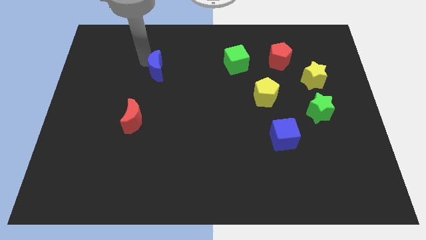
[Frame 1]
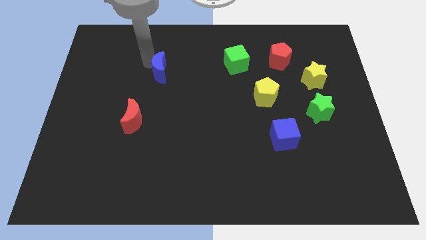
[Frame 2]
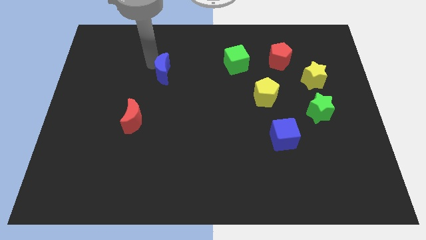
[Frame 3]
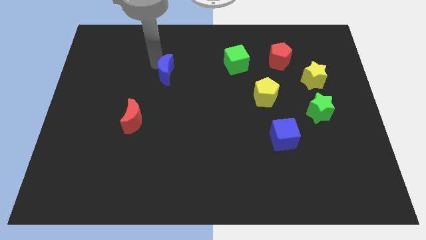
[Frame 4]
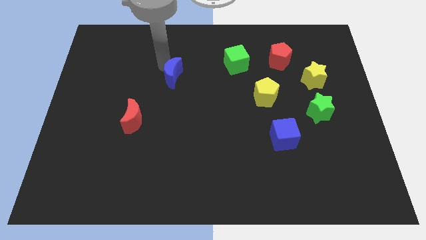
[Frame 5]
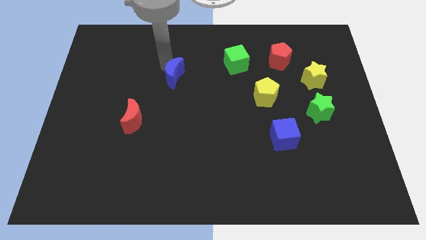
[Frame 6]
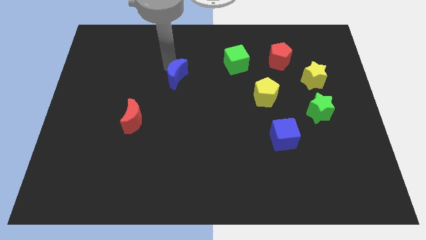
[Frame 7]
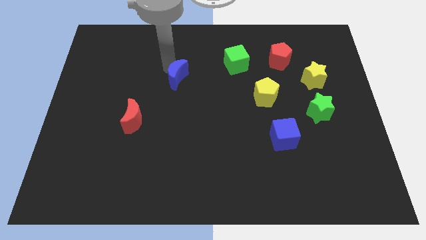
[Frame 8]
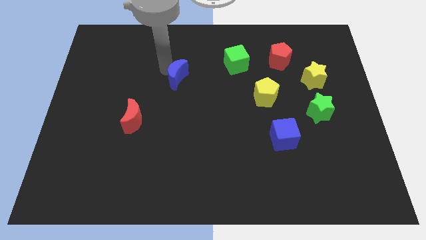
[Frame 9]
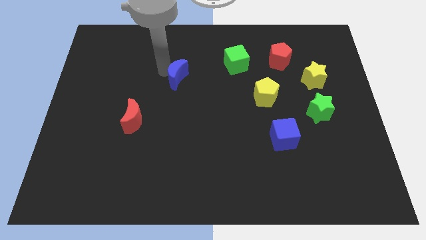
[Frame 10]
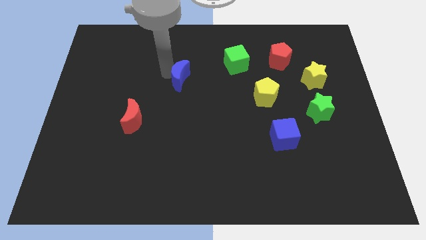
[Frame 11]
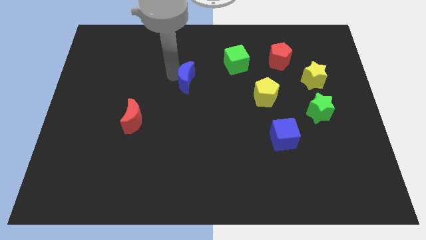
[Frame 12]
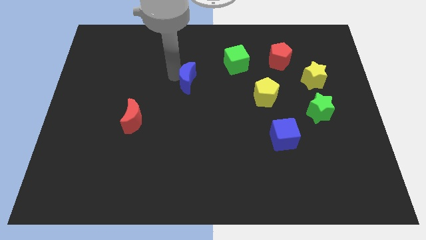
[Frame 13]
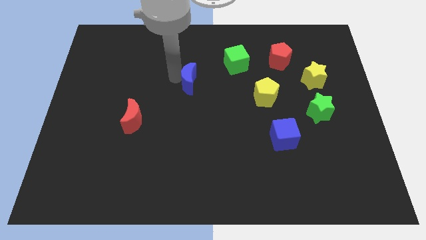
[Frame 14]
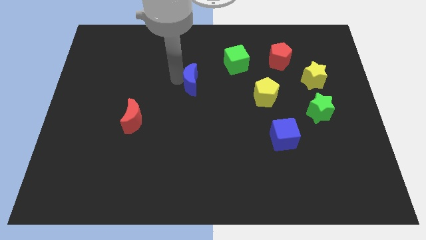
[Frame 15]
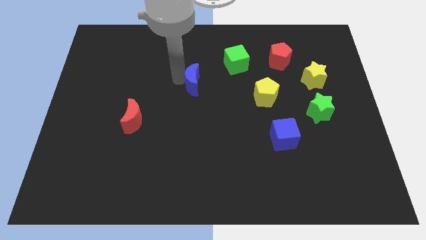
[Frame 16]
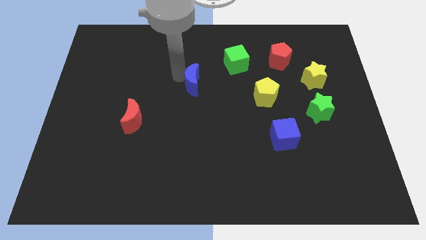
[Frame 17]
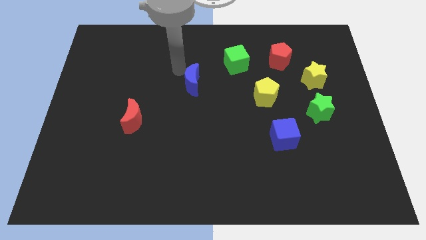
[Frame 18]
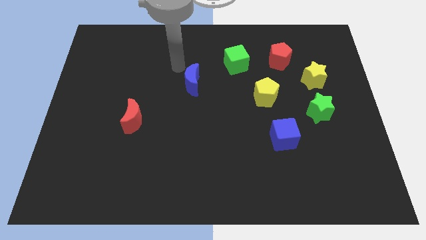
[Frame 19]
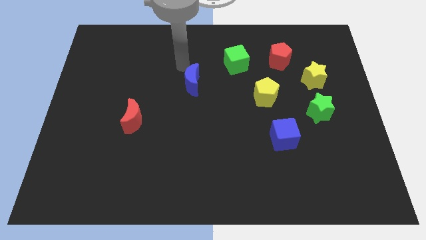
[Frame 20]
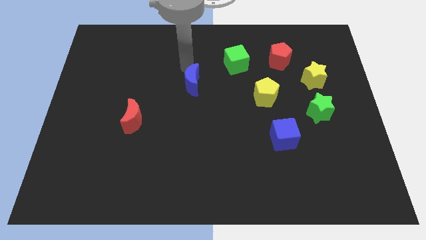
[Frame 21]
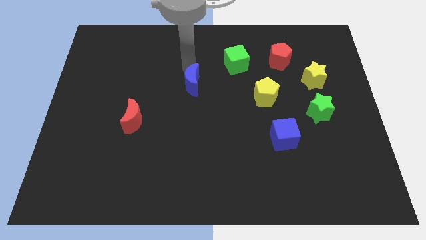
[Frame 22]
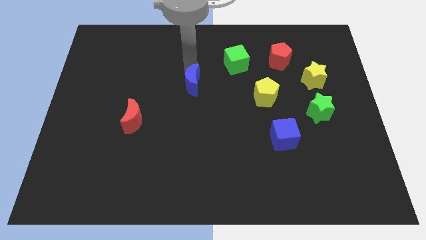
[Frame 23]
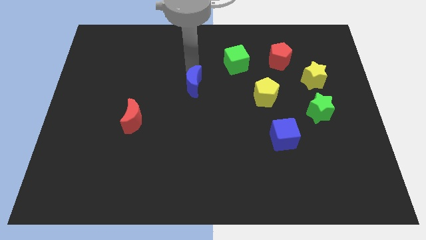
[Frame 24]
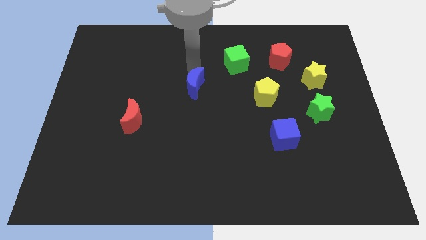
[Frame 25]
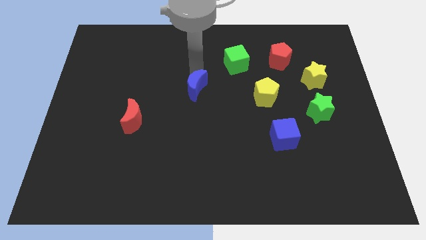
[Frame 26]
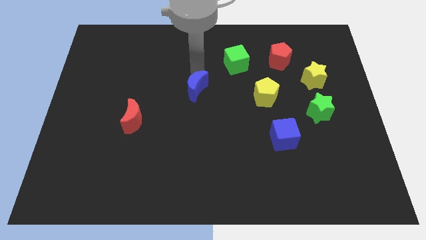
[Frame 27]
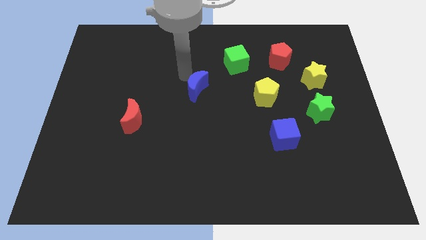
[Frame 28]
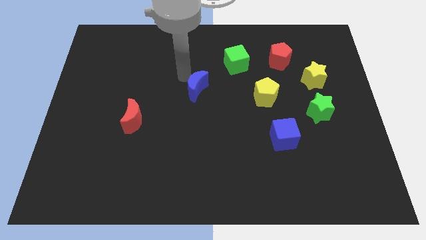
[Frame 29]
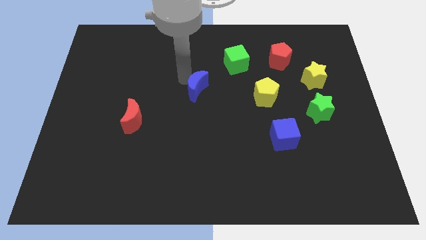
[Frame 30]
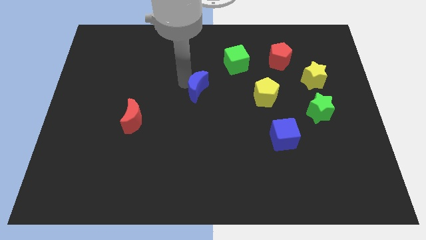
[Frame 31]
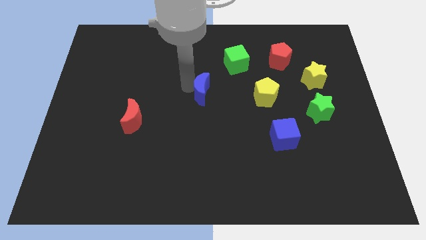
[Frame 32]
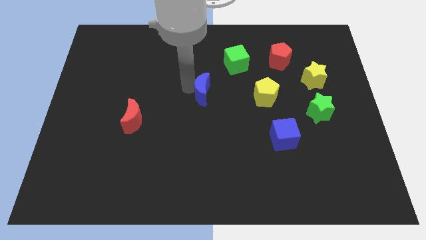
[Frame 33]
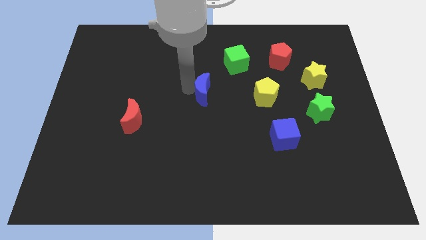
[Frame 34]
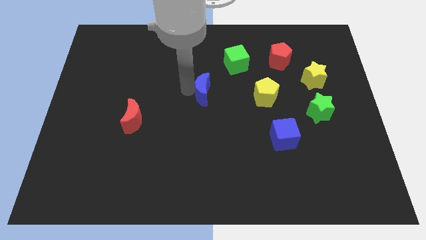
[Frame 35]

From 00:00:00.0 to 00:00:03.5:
push the blue moon slightly to the right

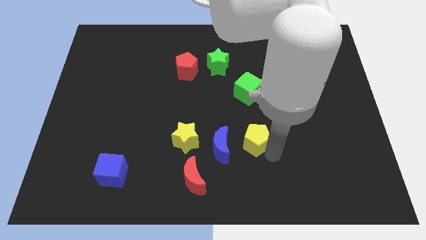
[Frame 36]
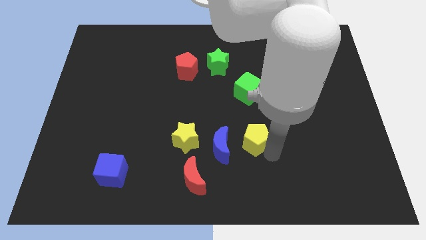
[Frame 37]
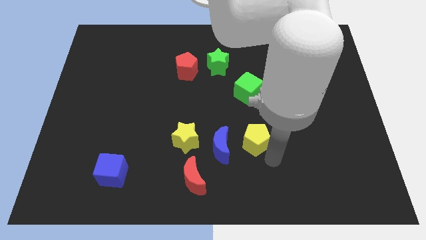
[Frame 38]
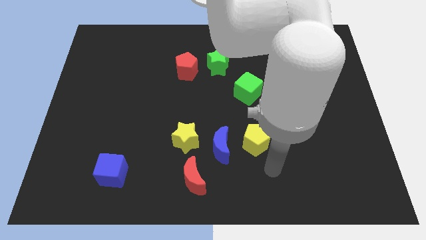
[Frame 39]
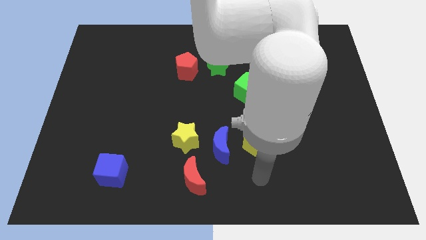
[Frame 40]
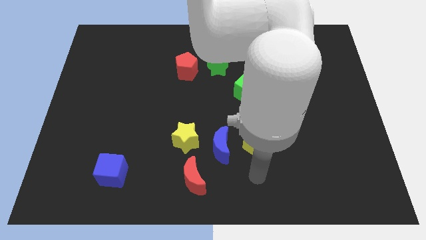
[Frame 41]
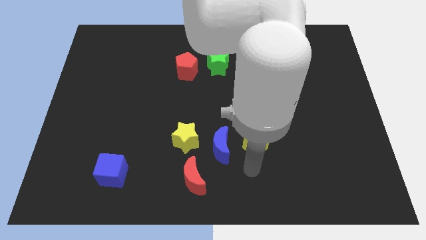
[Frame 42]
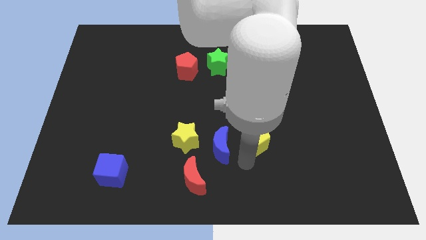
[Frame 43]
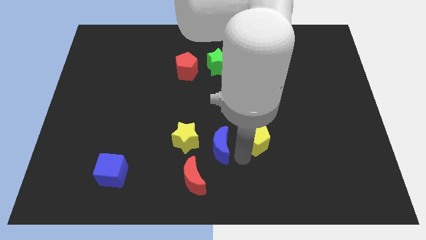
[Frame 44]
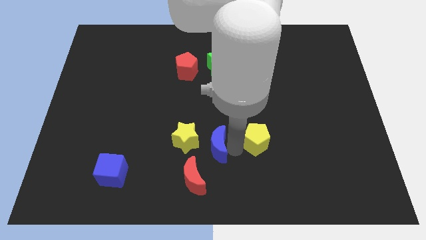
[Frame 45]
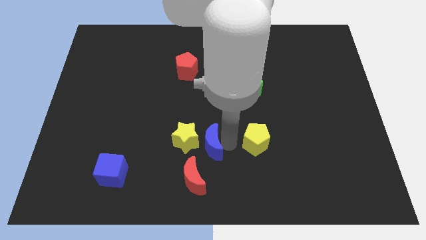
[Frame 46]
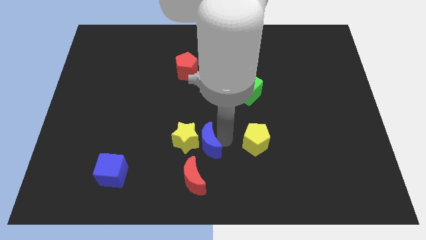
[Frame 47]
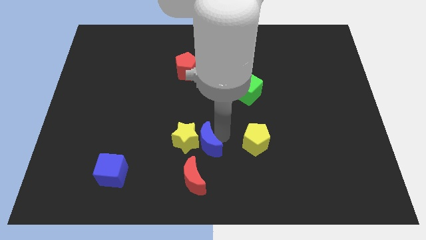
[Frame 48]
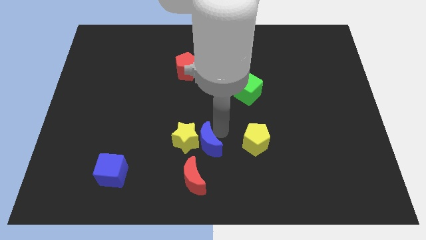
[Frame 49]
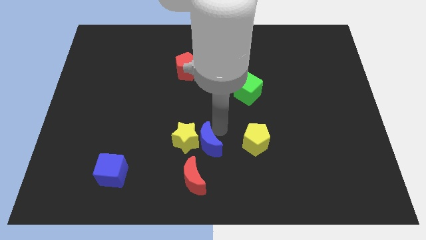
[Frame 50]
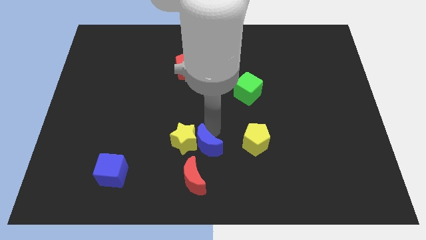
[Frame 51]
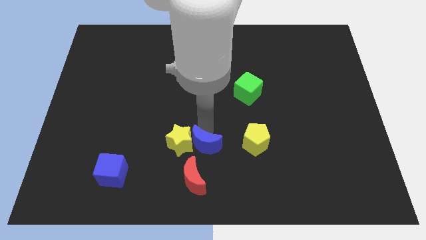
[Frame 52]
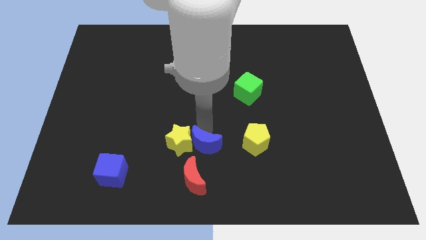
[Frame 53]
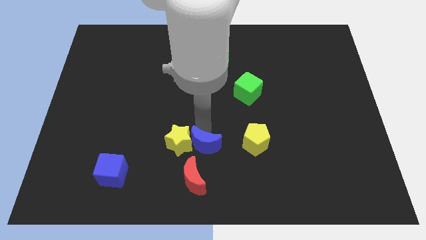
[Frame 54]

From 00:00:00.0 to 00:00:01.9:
push the blue moon into the yellow star

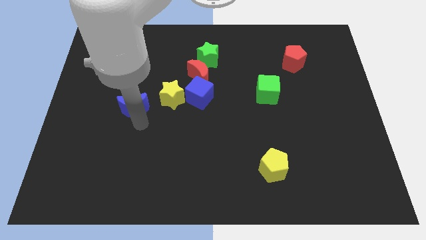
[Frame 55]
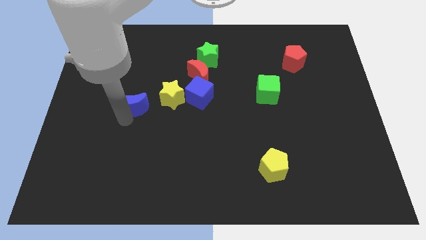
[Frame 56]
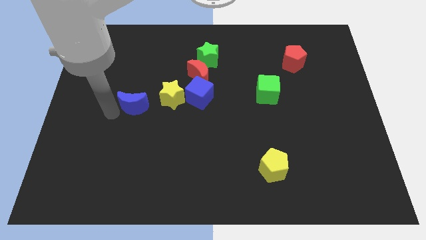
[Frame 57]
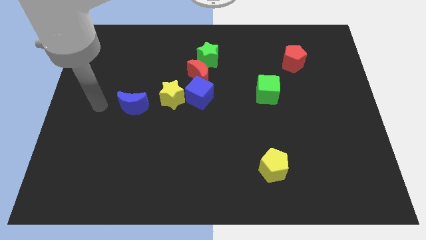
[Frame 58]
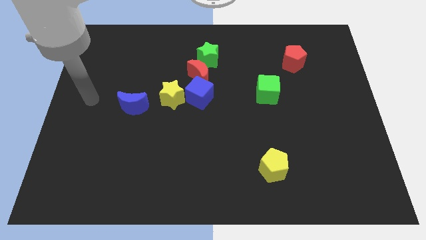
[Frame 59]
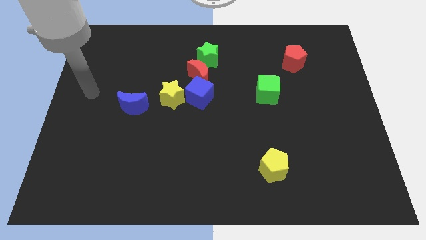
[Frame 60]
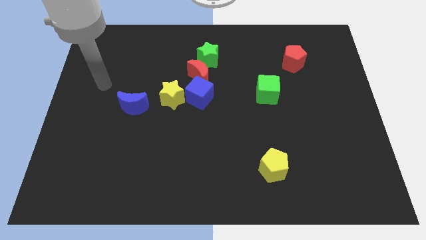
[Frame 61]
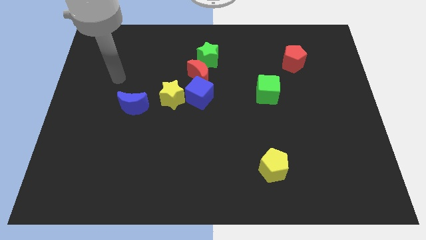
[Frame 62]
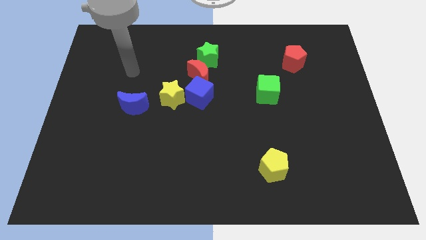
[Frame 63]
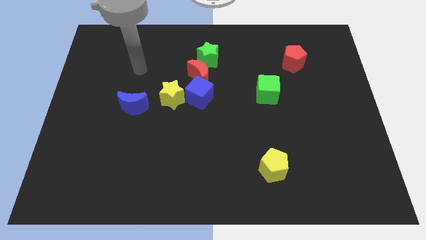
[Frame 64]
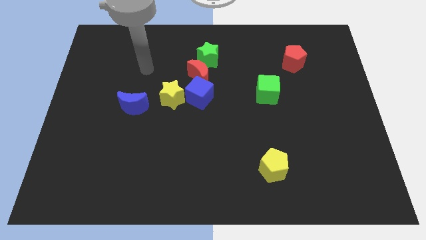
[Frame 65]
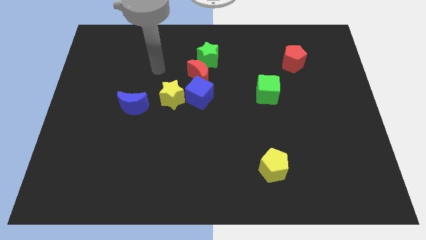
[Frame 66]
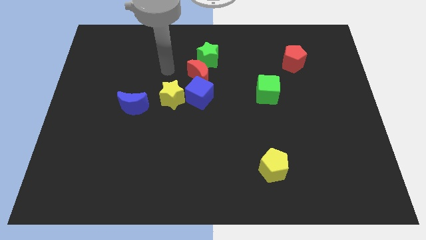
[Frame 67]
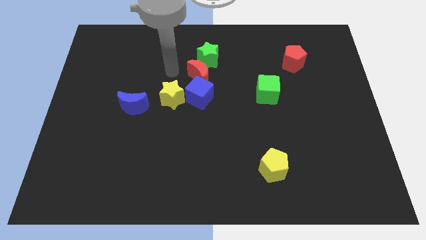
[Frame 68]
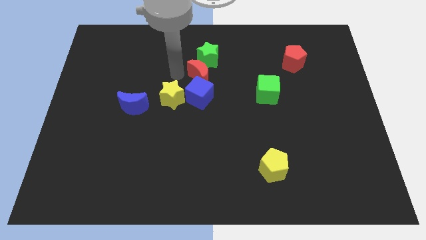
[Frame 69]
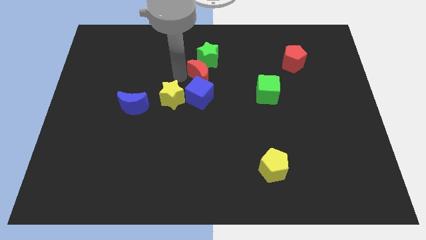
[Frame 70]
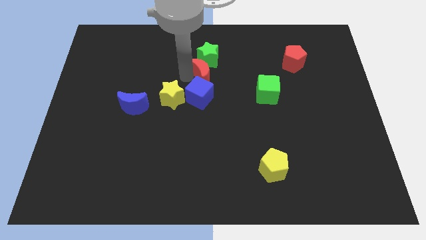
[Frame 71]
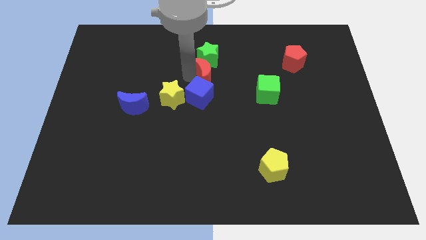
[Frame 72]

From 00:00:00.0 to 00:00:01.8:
move yourself away from the blue moon

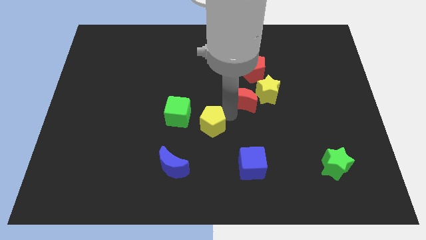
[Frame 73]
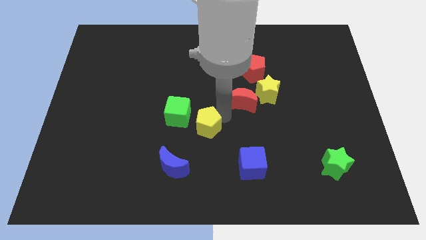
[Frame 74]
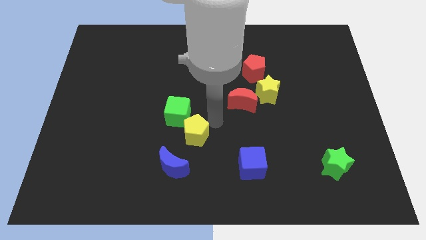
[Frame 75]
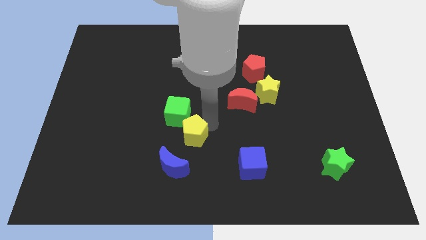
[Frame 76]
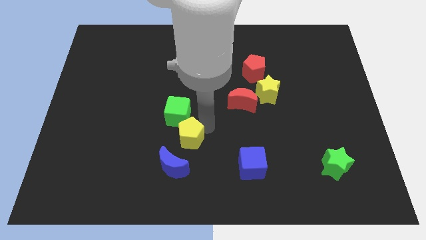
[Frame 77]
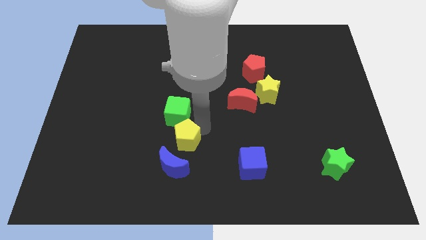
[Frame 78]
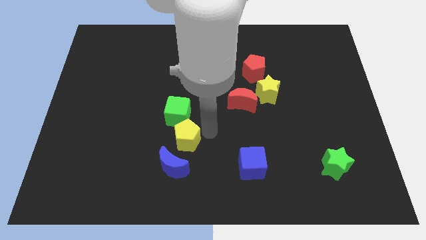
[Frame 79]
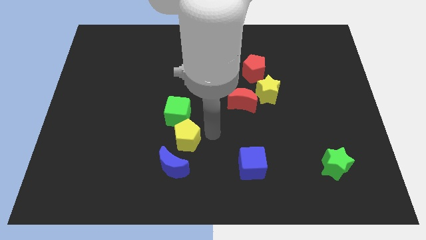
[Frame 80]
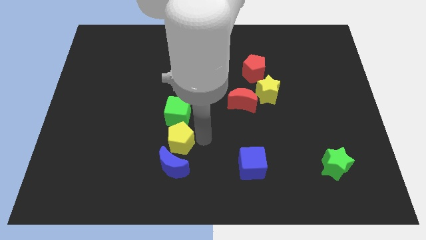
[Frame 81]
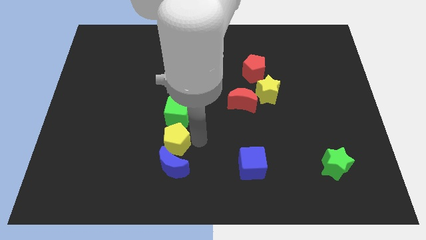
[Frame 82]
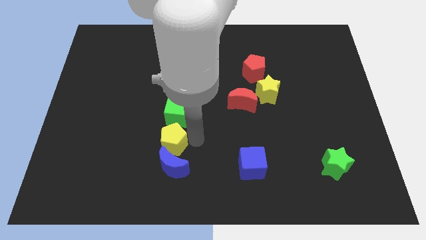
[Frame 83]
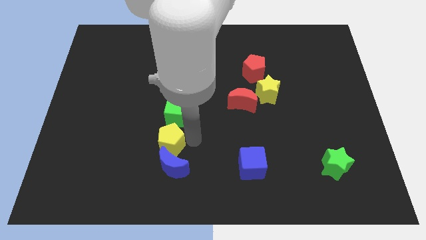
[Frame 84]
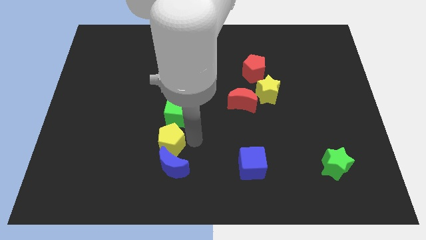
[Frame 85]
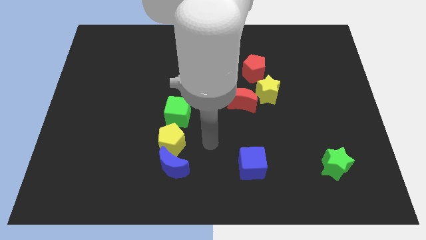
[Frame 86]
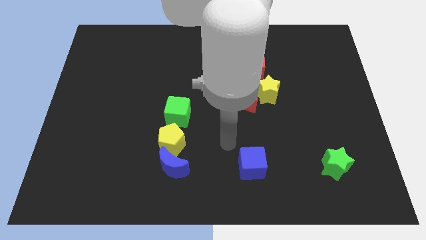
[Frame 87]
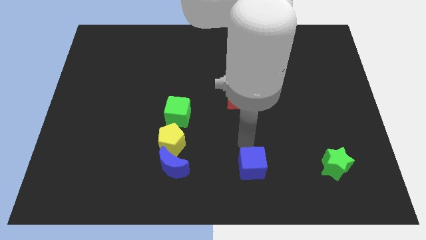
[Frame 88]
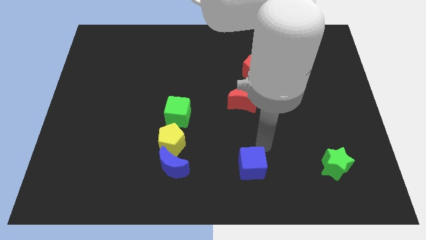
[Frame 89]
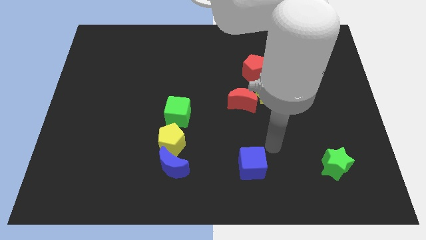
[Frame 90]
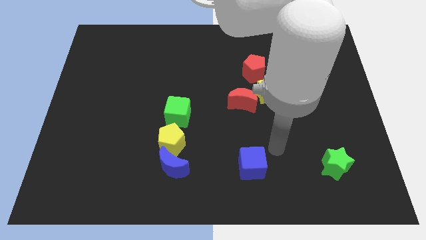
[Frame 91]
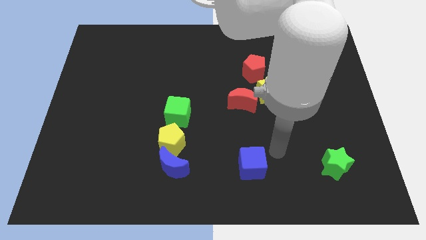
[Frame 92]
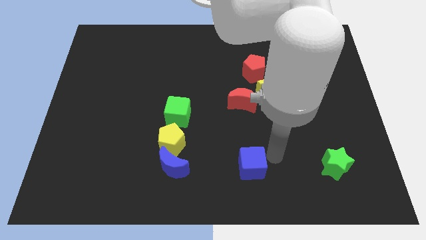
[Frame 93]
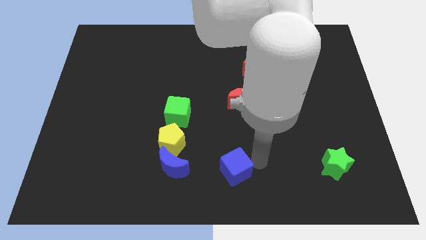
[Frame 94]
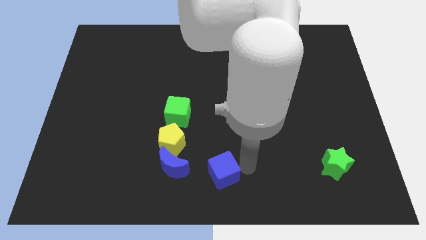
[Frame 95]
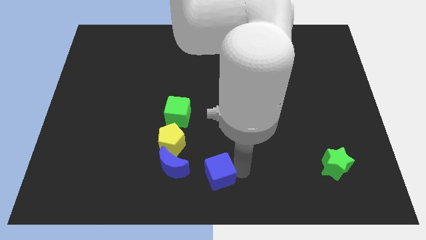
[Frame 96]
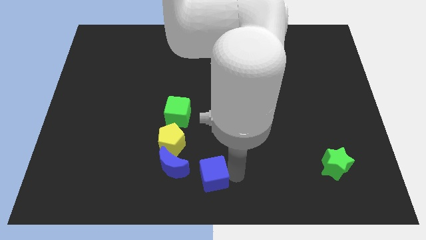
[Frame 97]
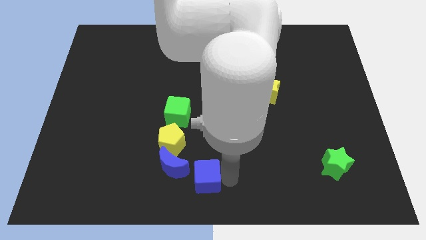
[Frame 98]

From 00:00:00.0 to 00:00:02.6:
push the yellow pentagon below the green cube
